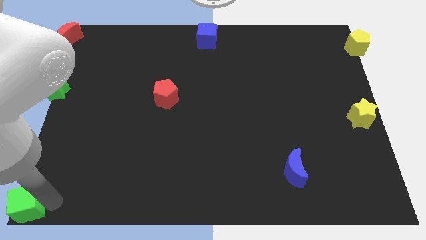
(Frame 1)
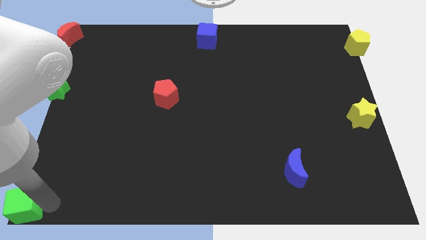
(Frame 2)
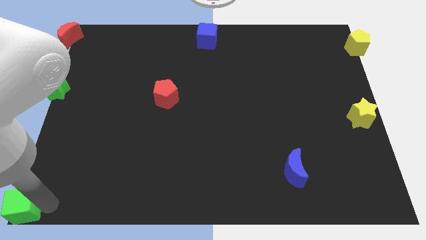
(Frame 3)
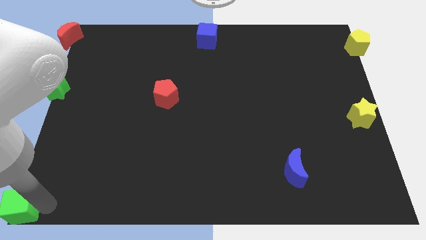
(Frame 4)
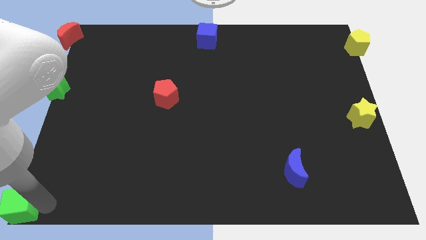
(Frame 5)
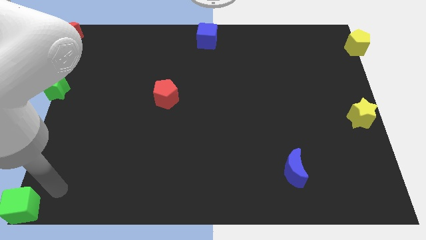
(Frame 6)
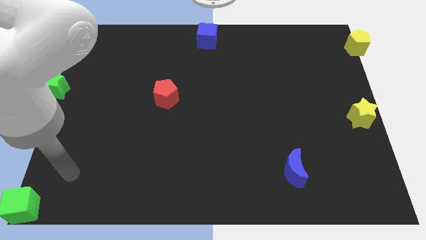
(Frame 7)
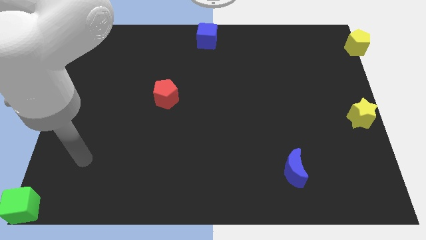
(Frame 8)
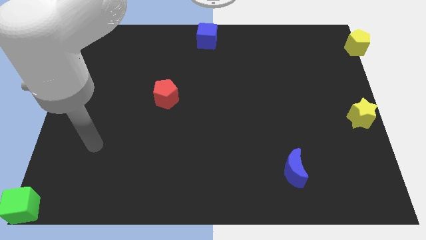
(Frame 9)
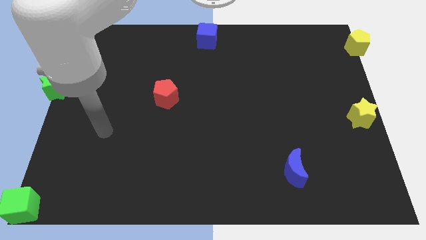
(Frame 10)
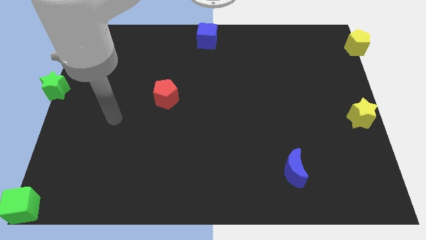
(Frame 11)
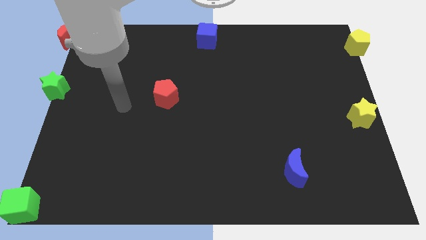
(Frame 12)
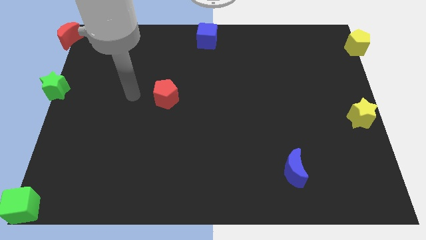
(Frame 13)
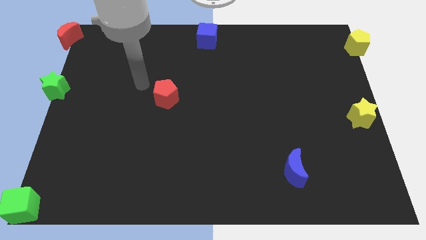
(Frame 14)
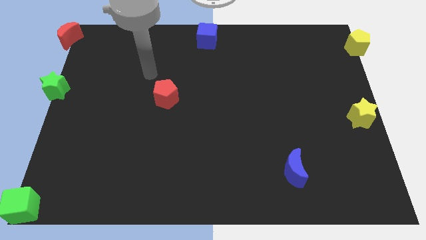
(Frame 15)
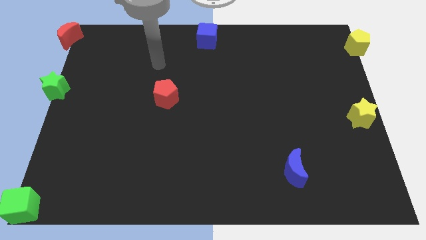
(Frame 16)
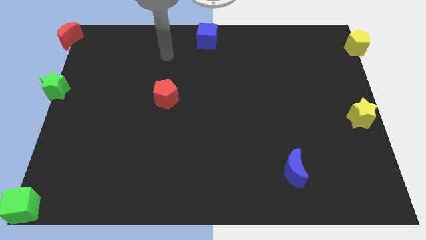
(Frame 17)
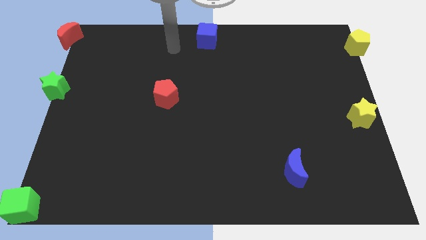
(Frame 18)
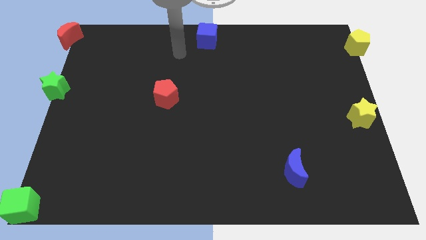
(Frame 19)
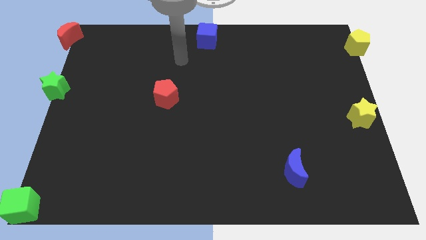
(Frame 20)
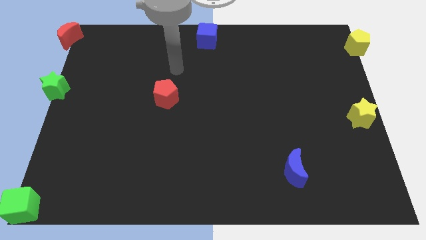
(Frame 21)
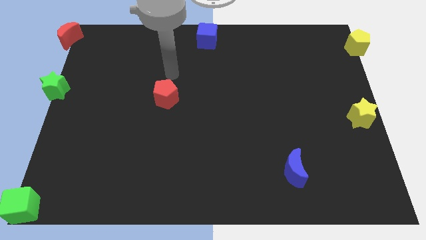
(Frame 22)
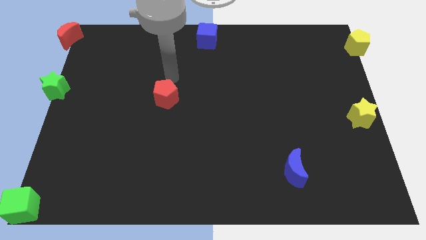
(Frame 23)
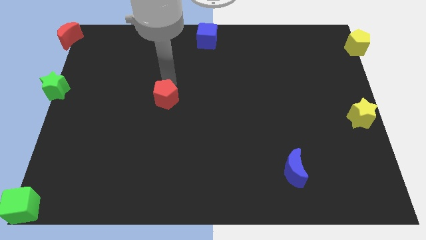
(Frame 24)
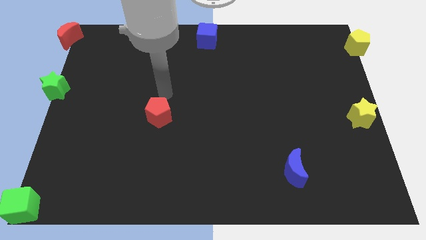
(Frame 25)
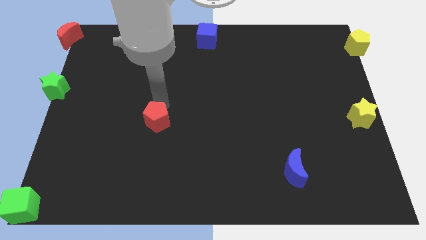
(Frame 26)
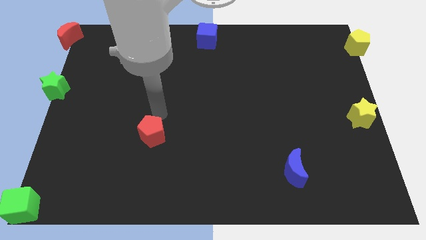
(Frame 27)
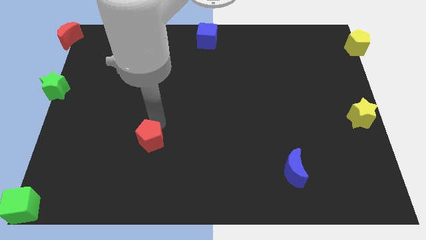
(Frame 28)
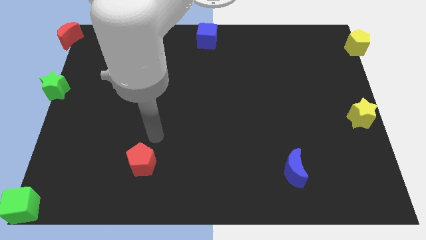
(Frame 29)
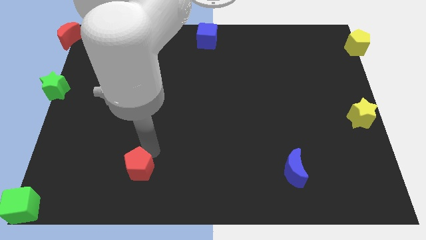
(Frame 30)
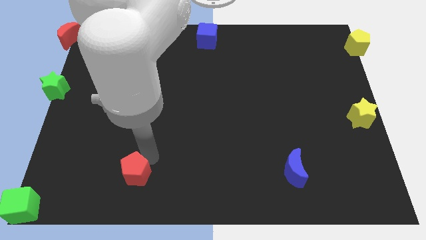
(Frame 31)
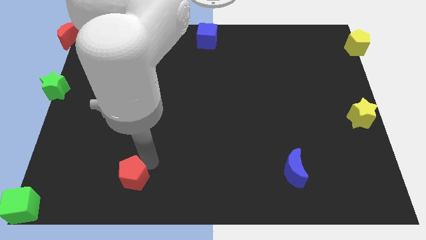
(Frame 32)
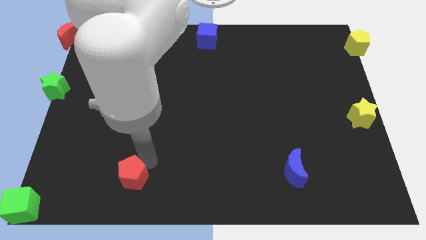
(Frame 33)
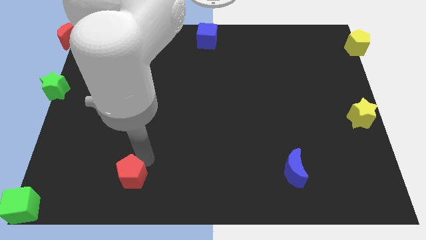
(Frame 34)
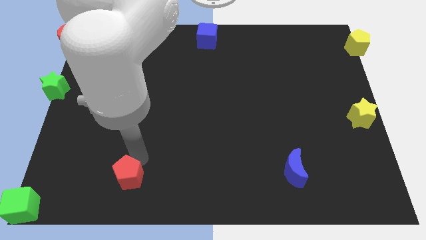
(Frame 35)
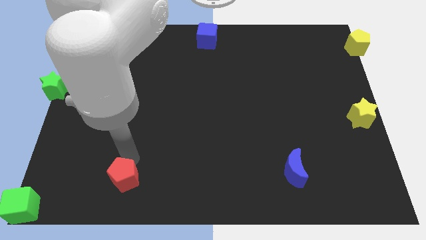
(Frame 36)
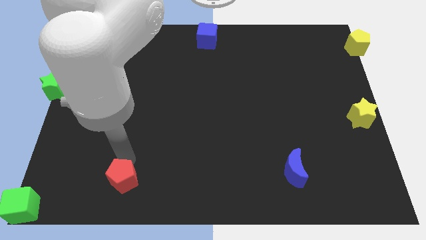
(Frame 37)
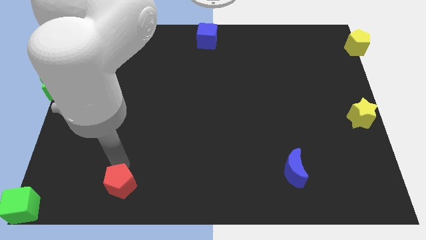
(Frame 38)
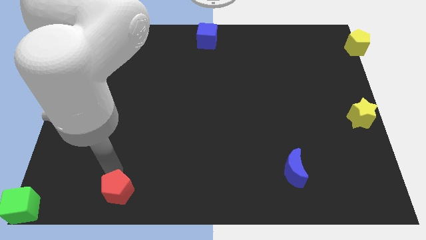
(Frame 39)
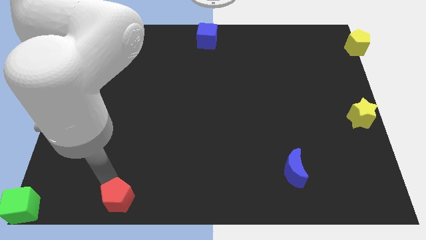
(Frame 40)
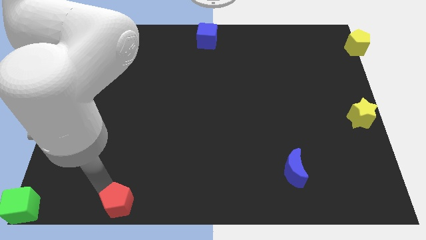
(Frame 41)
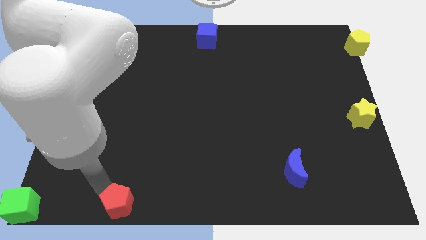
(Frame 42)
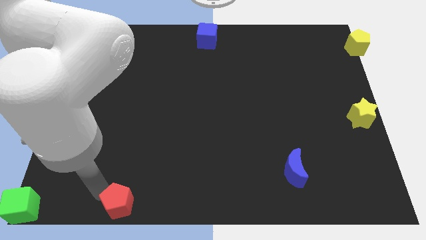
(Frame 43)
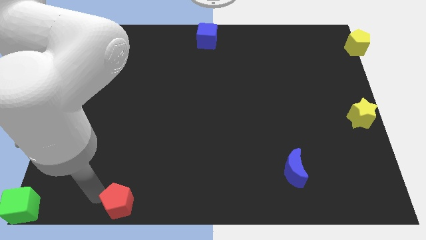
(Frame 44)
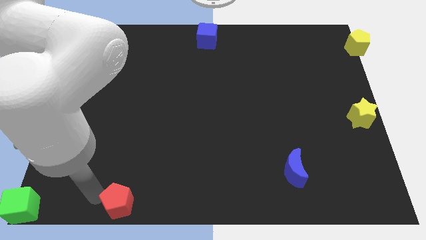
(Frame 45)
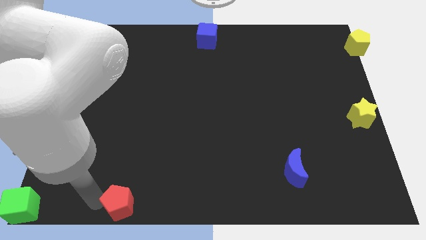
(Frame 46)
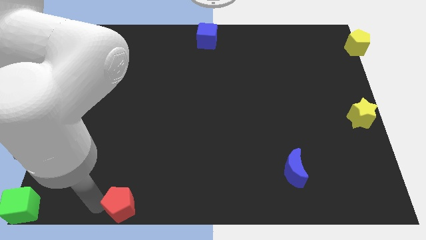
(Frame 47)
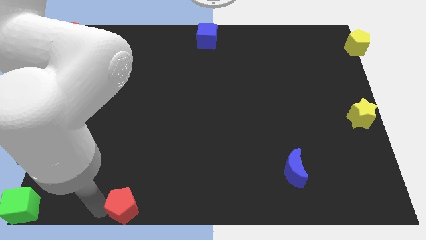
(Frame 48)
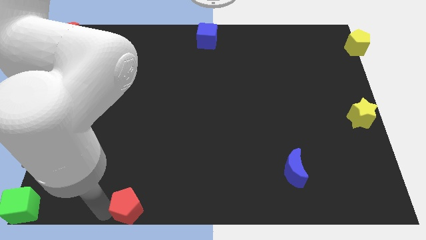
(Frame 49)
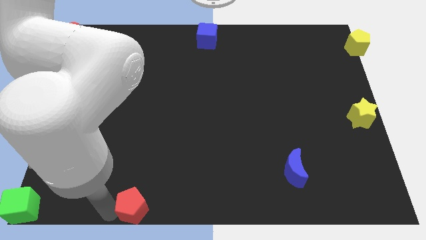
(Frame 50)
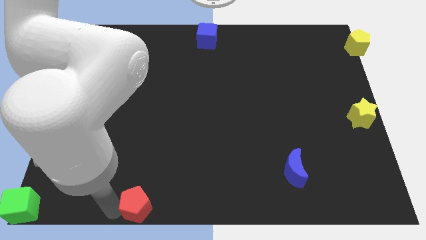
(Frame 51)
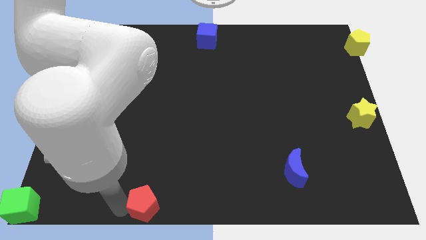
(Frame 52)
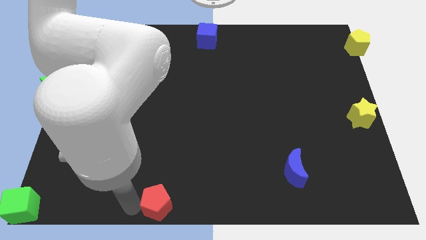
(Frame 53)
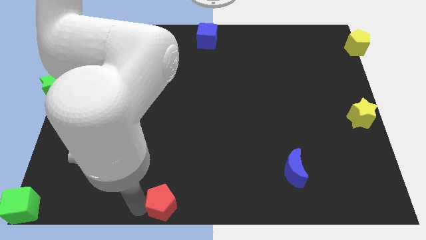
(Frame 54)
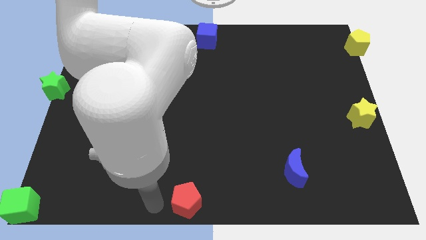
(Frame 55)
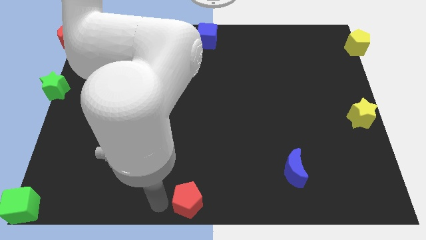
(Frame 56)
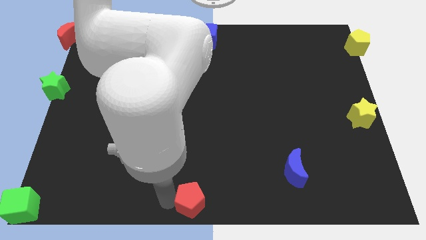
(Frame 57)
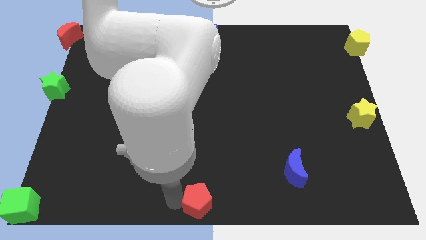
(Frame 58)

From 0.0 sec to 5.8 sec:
move the red pentagon at the bottom center

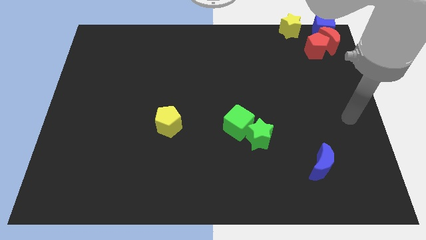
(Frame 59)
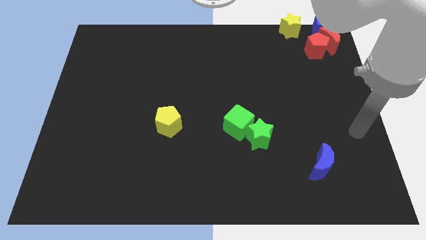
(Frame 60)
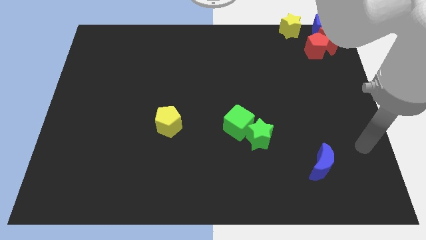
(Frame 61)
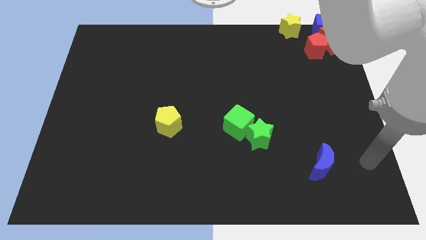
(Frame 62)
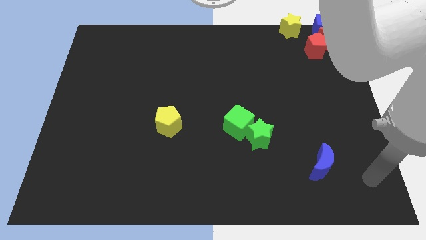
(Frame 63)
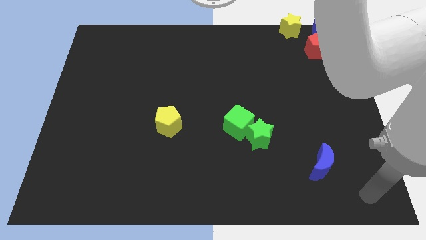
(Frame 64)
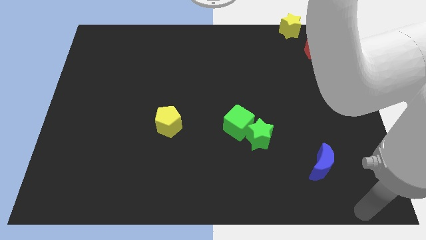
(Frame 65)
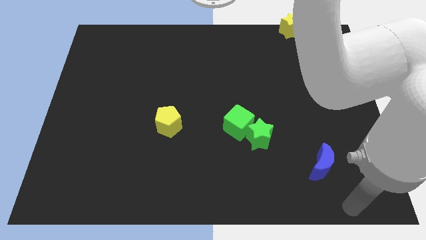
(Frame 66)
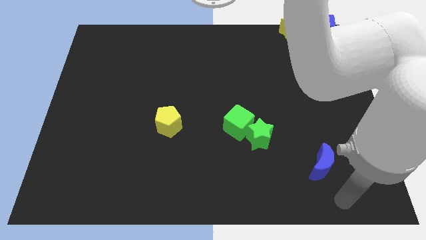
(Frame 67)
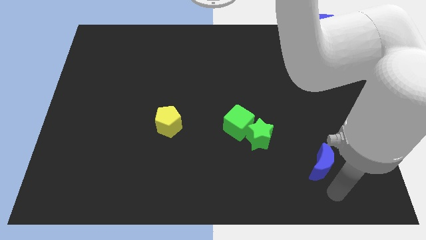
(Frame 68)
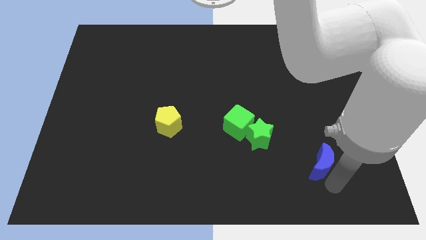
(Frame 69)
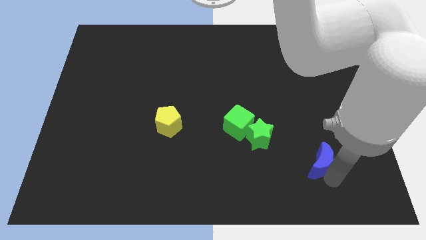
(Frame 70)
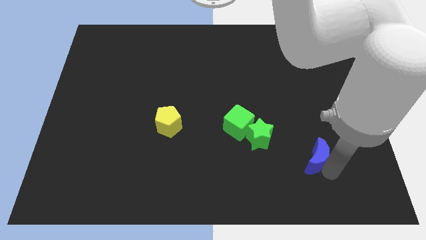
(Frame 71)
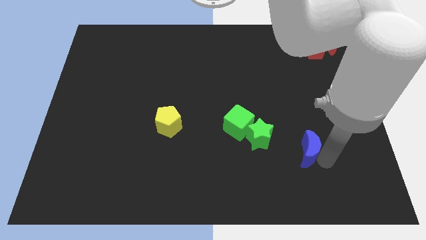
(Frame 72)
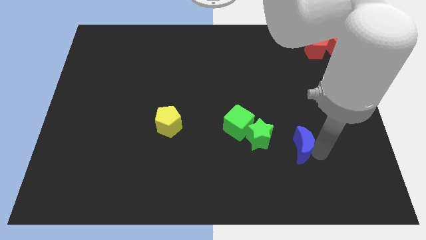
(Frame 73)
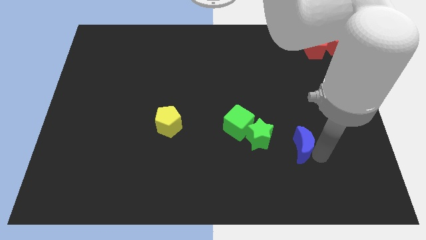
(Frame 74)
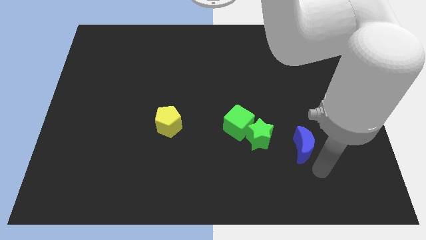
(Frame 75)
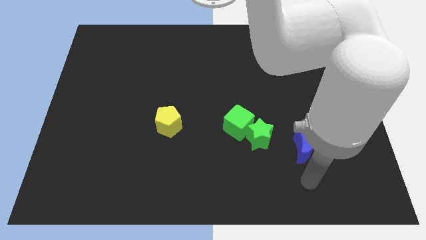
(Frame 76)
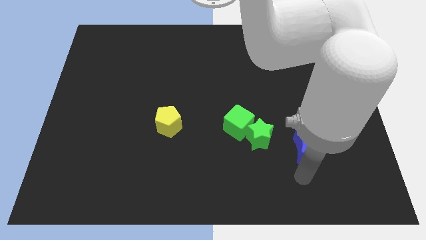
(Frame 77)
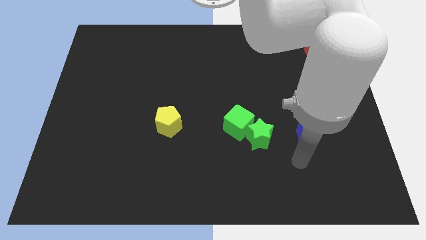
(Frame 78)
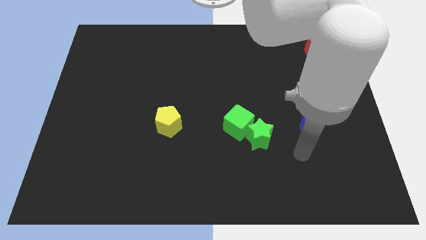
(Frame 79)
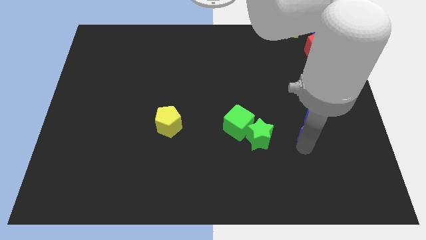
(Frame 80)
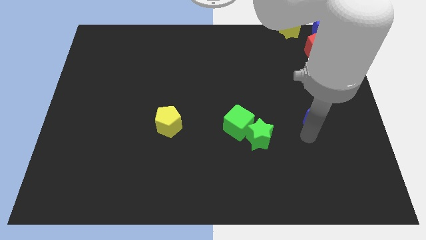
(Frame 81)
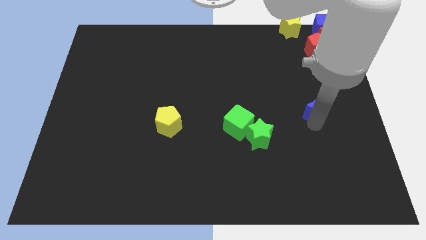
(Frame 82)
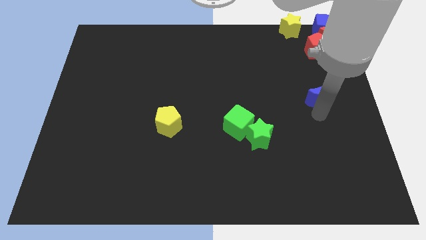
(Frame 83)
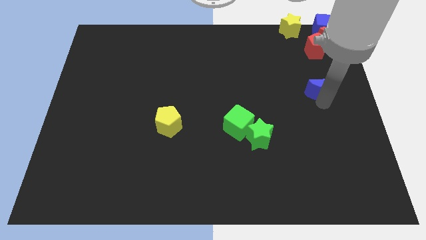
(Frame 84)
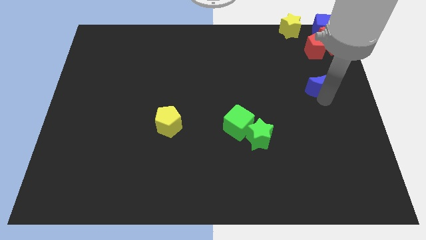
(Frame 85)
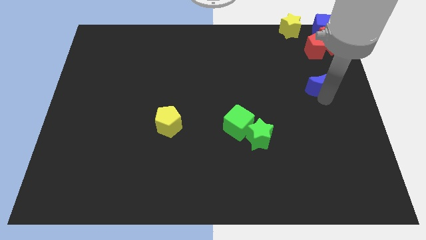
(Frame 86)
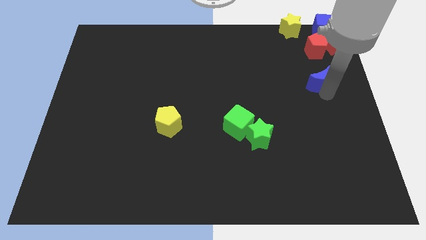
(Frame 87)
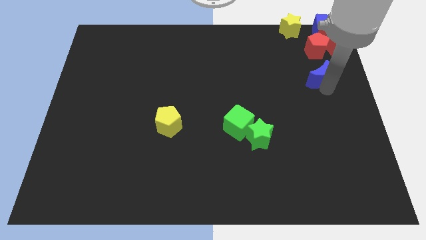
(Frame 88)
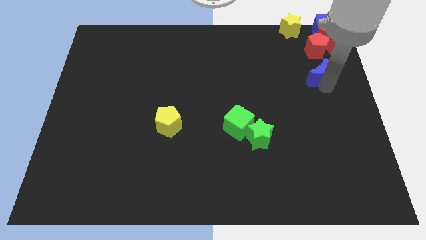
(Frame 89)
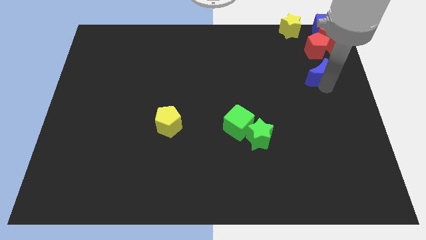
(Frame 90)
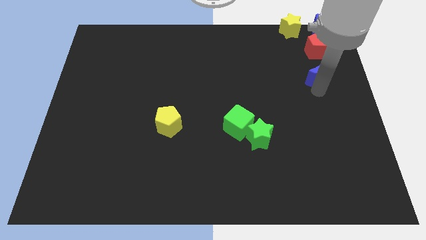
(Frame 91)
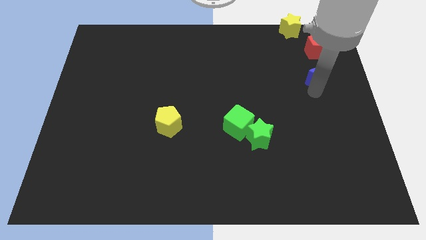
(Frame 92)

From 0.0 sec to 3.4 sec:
move blue moon below the red pentagon
